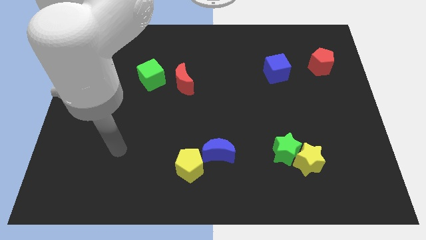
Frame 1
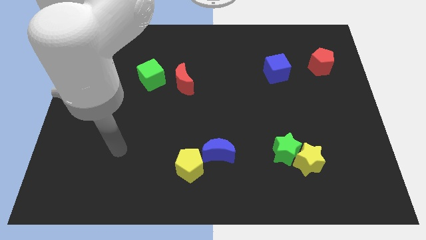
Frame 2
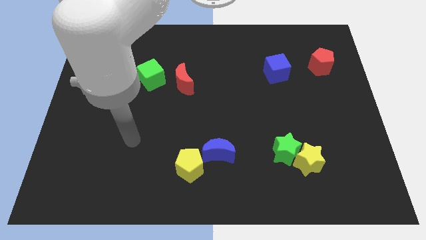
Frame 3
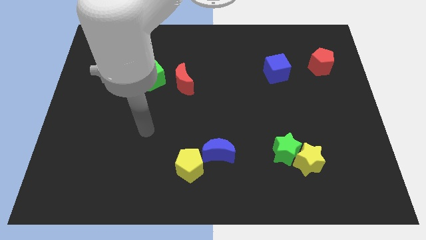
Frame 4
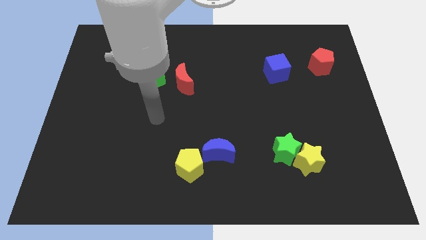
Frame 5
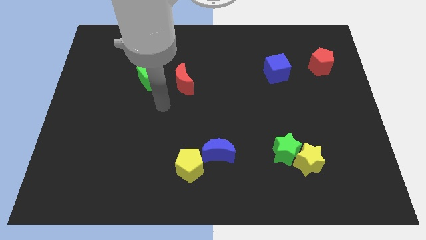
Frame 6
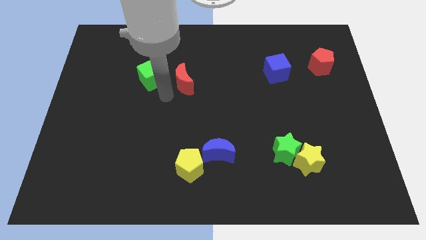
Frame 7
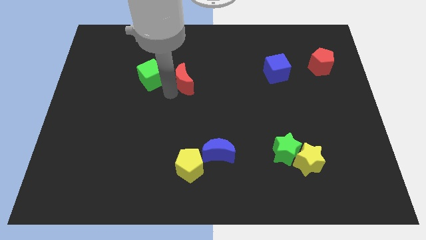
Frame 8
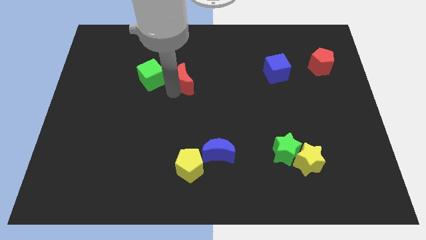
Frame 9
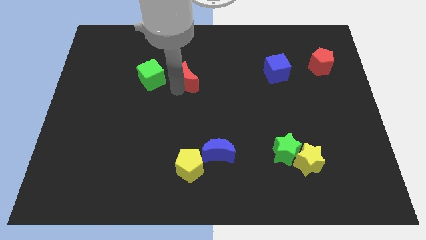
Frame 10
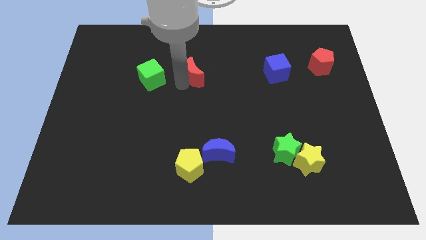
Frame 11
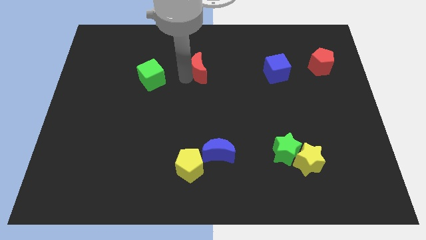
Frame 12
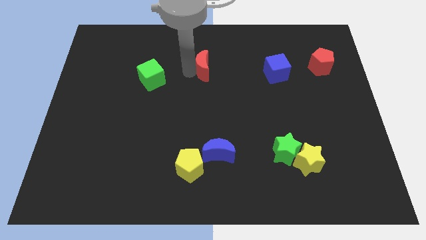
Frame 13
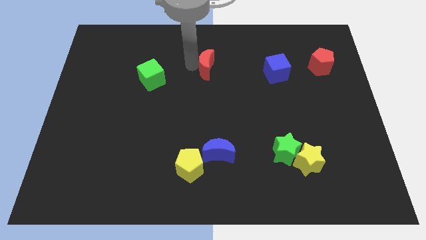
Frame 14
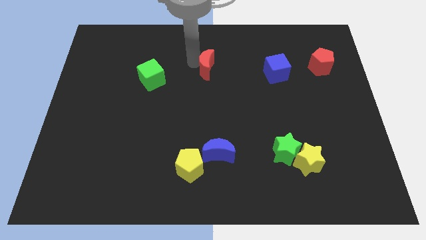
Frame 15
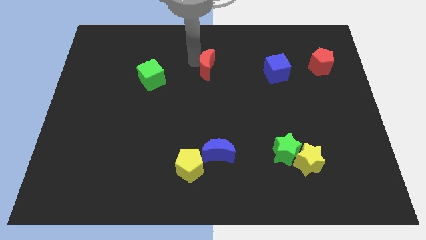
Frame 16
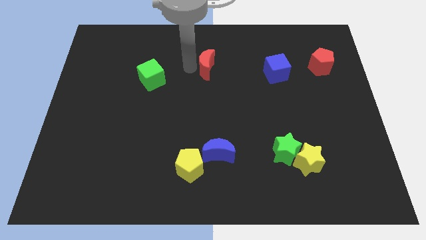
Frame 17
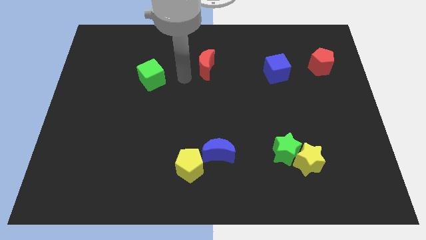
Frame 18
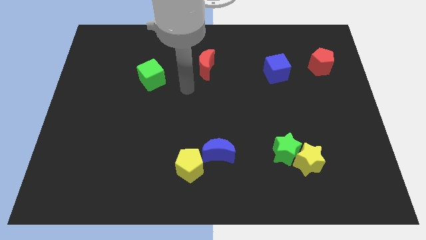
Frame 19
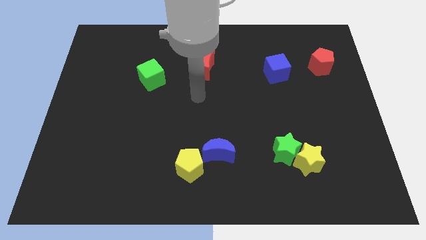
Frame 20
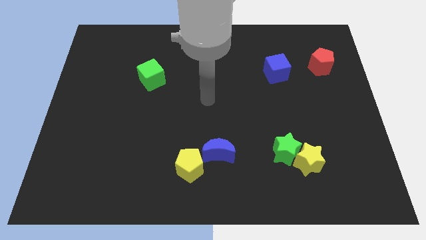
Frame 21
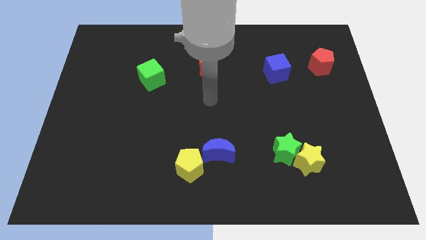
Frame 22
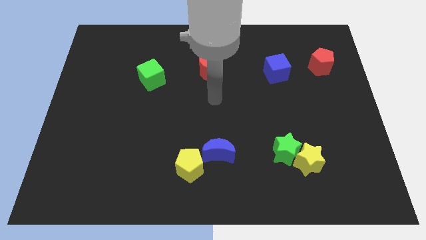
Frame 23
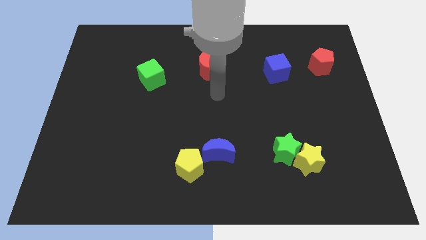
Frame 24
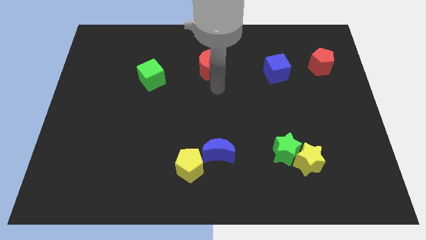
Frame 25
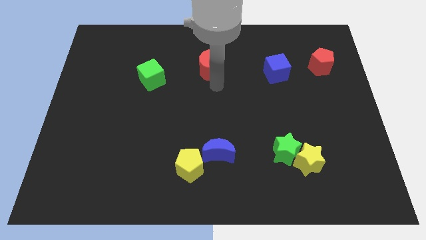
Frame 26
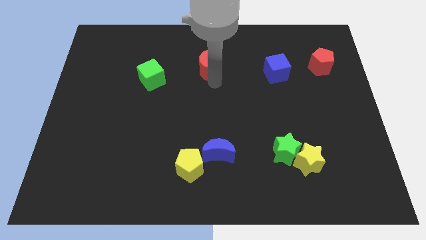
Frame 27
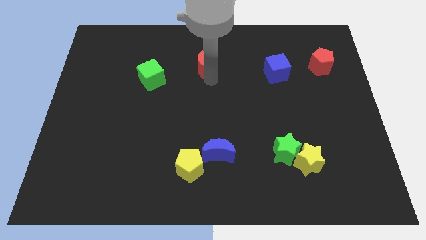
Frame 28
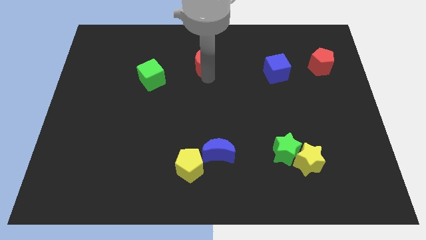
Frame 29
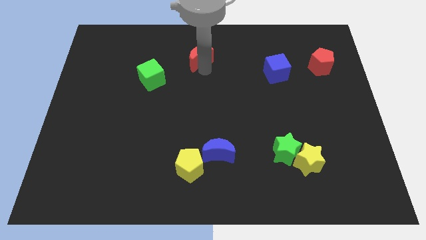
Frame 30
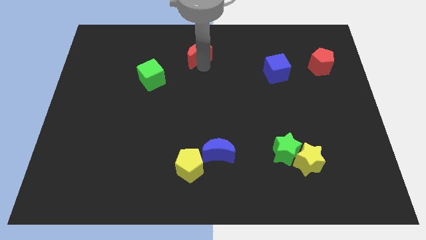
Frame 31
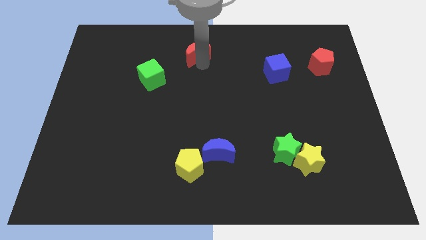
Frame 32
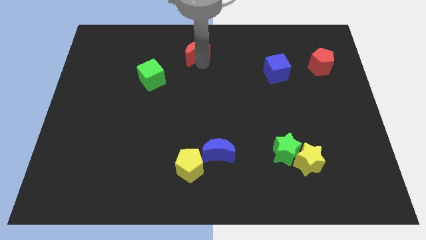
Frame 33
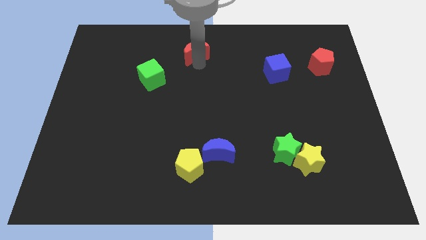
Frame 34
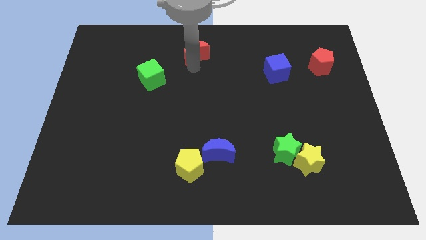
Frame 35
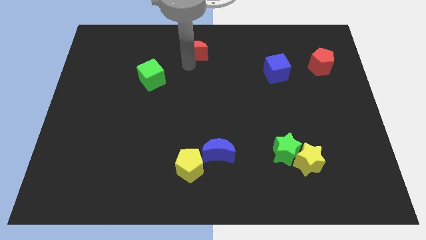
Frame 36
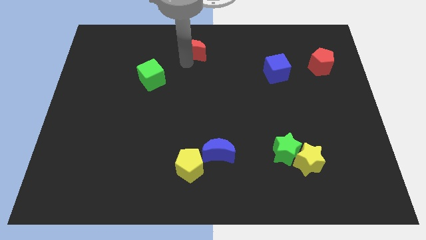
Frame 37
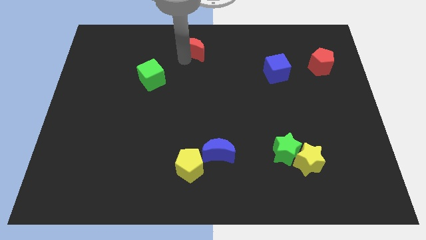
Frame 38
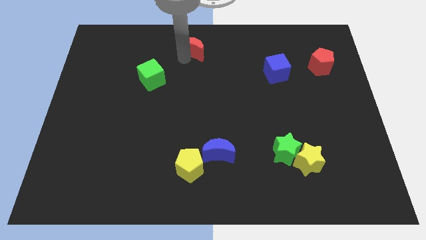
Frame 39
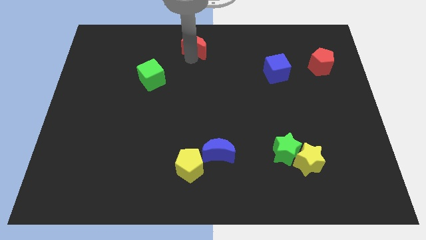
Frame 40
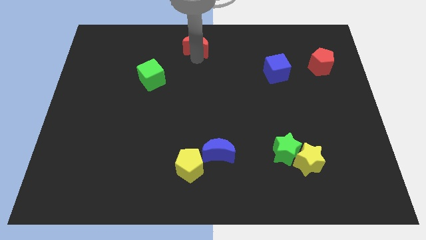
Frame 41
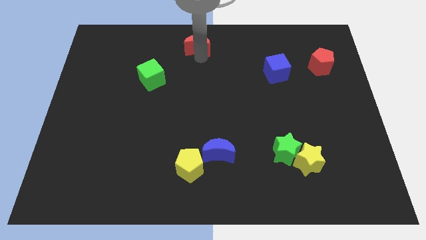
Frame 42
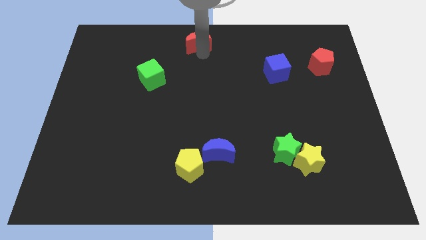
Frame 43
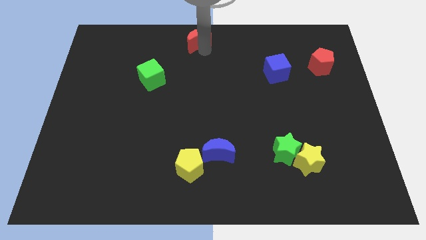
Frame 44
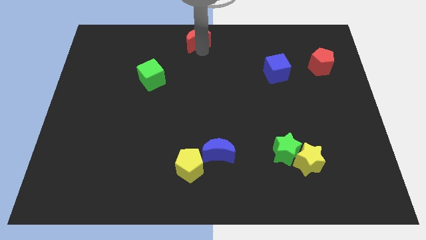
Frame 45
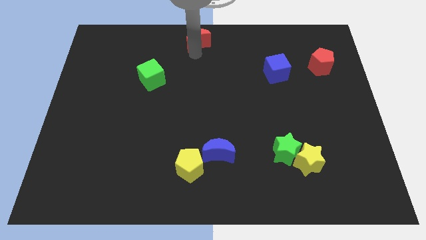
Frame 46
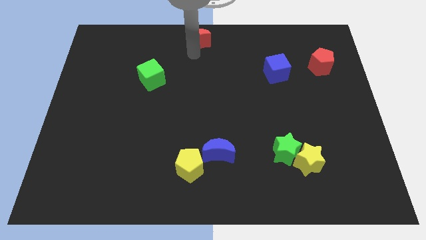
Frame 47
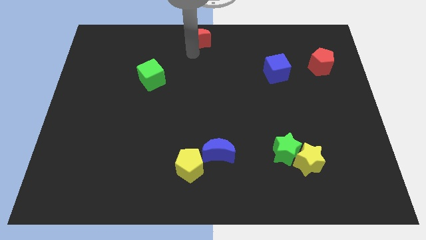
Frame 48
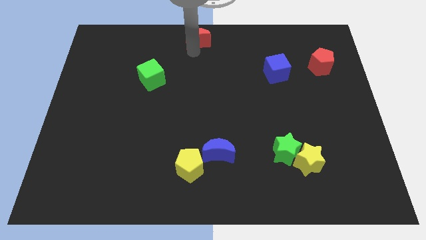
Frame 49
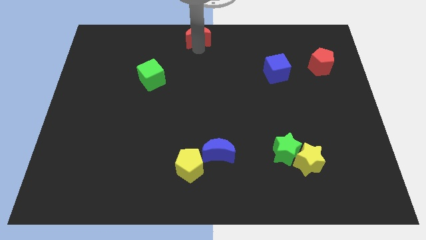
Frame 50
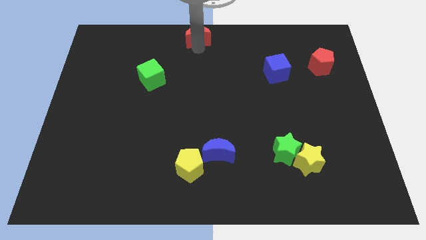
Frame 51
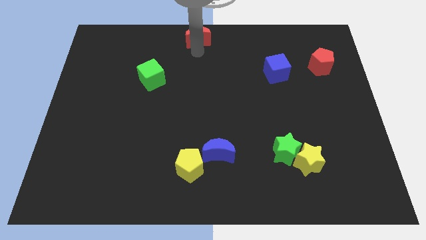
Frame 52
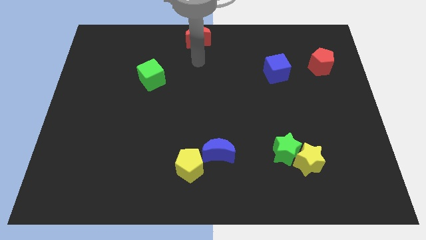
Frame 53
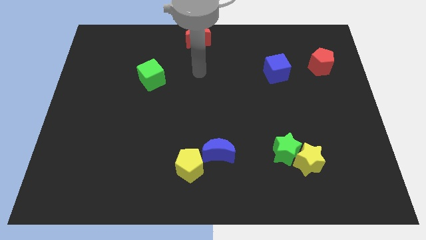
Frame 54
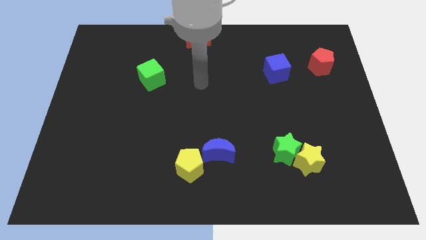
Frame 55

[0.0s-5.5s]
move the red moon away from green cube

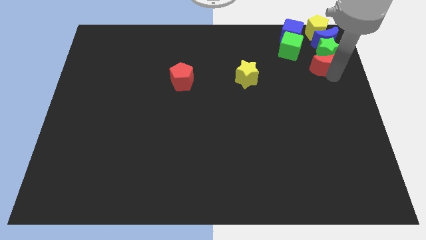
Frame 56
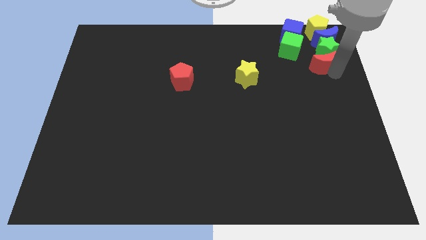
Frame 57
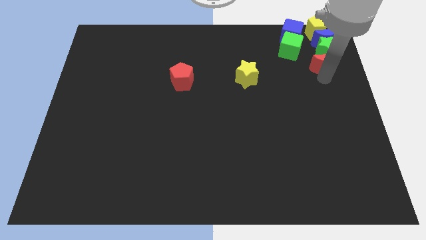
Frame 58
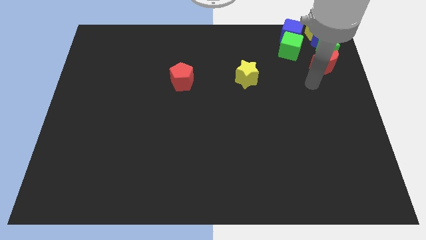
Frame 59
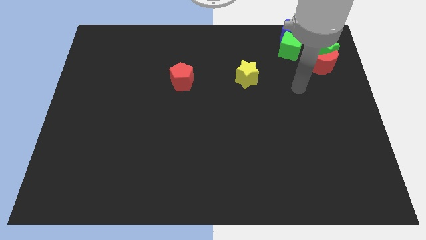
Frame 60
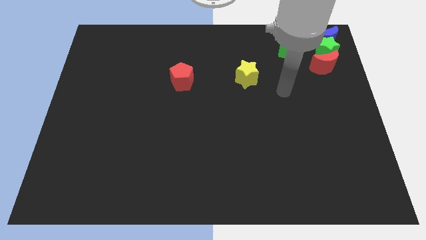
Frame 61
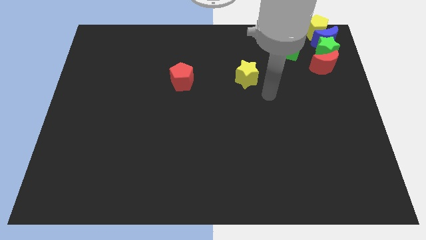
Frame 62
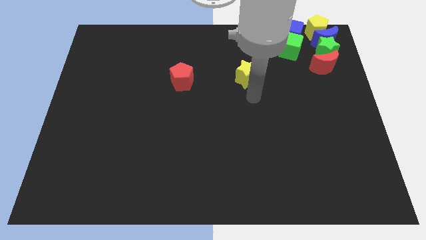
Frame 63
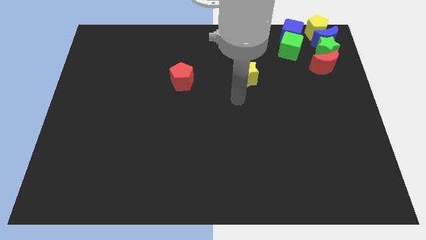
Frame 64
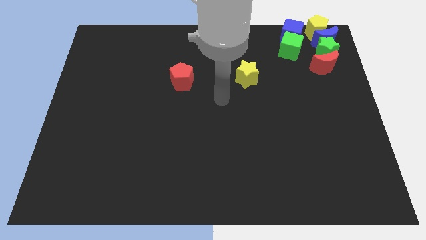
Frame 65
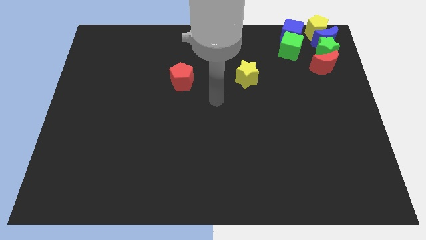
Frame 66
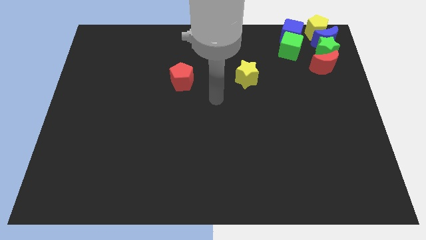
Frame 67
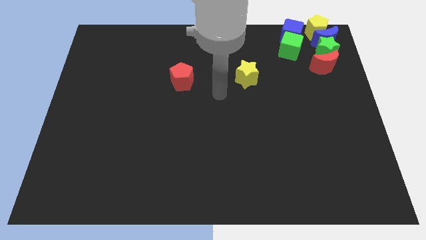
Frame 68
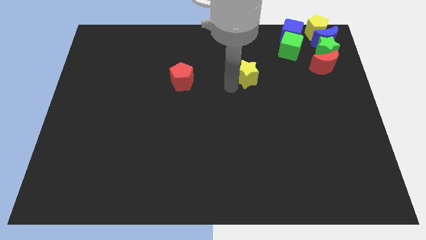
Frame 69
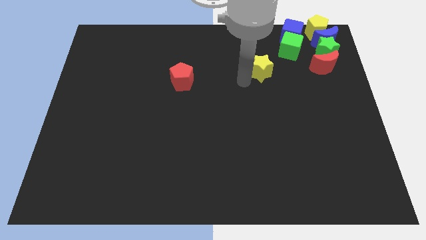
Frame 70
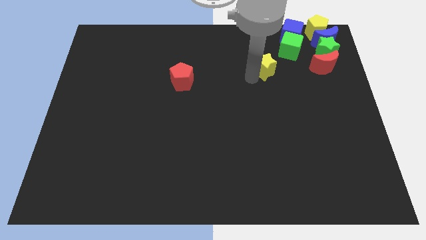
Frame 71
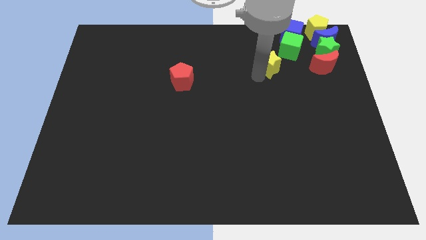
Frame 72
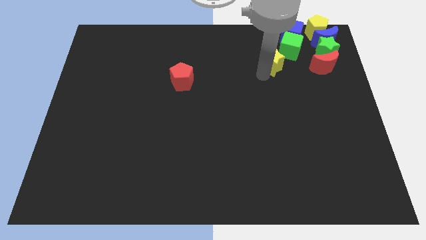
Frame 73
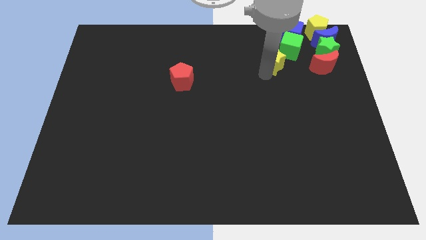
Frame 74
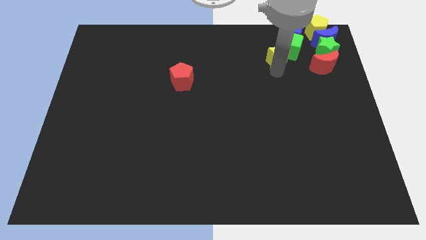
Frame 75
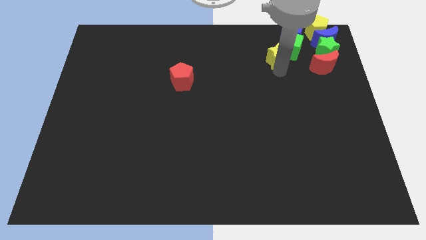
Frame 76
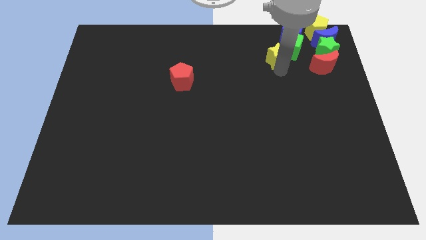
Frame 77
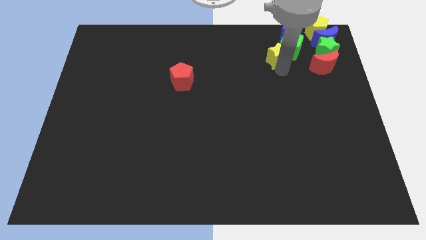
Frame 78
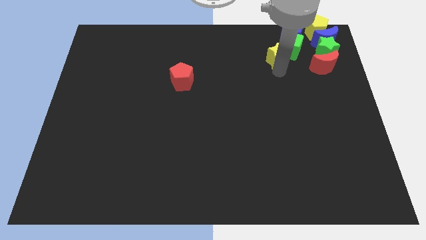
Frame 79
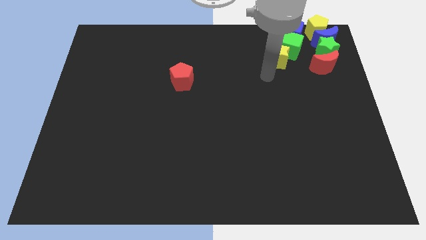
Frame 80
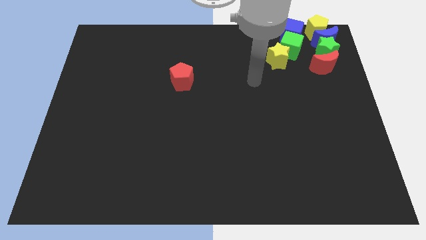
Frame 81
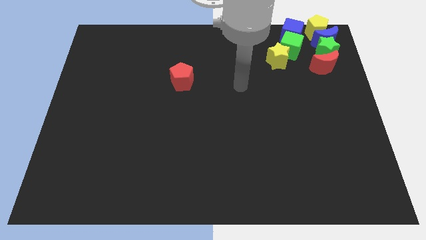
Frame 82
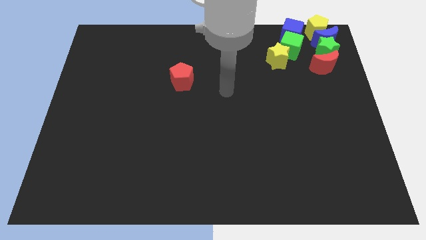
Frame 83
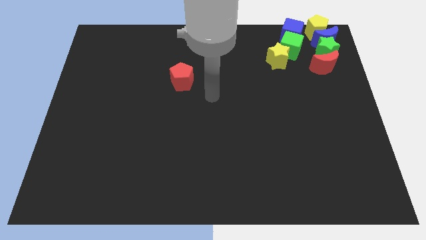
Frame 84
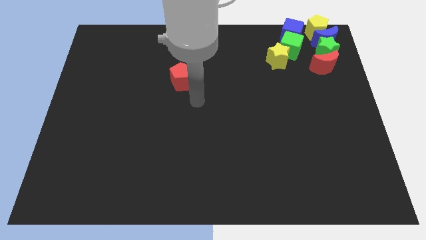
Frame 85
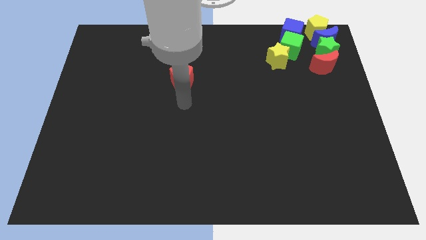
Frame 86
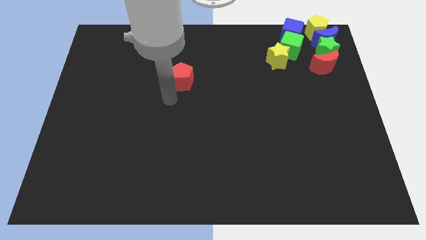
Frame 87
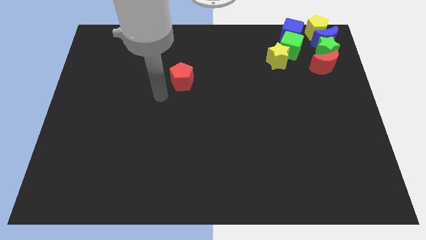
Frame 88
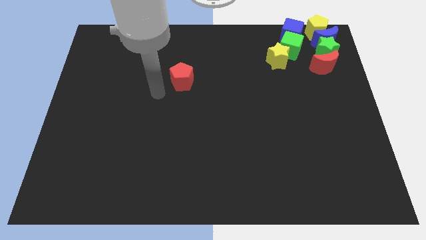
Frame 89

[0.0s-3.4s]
push the yellow star diagonally to the bottom left of the green cube
